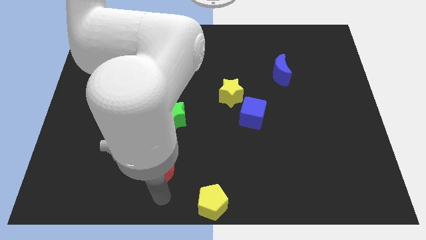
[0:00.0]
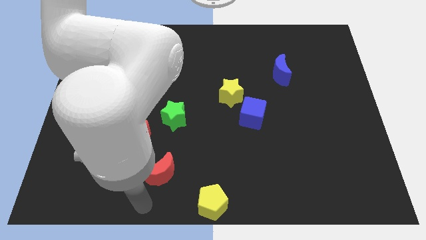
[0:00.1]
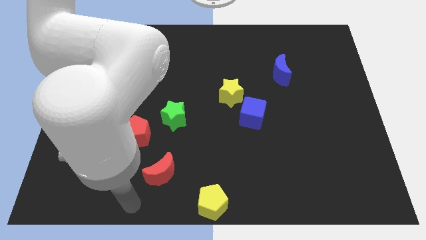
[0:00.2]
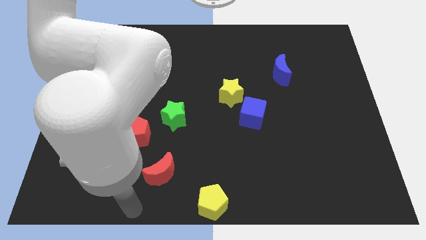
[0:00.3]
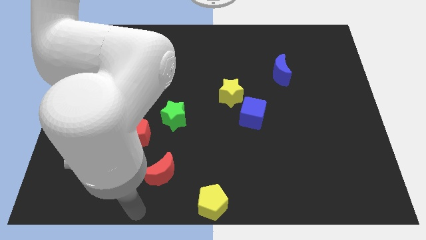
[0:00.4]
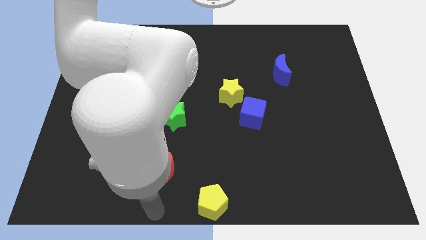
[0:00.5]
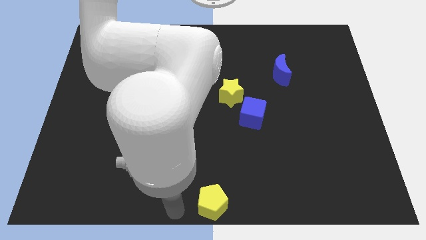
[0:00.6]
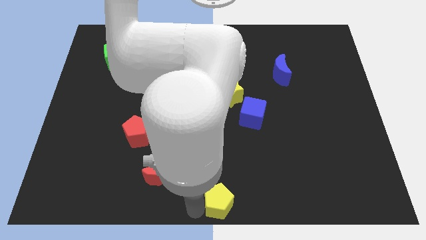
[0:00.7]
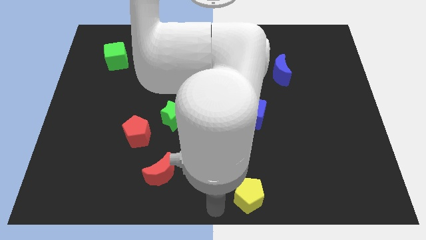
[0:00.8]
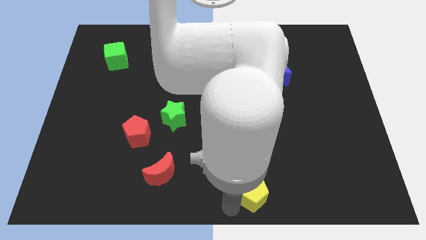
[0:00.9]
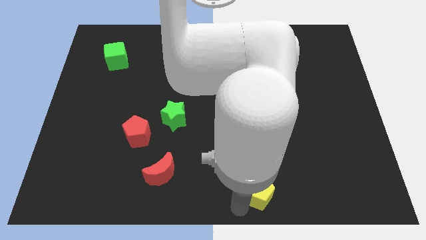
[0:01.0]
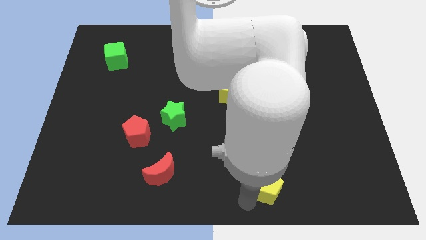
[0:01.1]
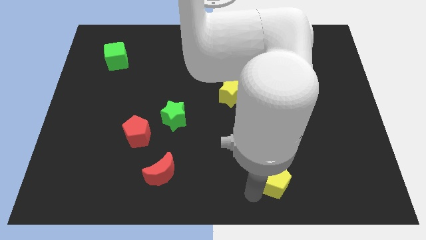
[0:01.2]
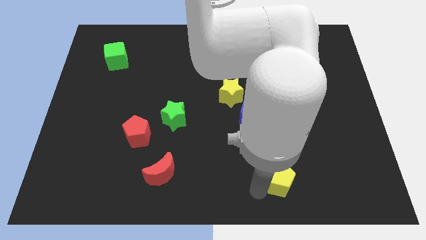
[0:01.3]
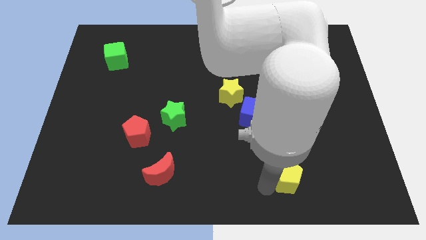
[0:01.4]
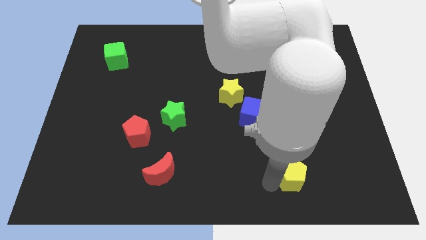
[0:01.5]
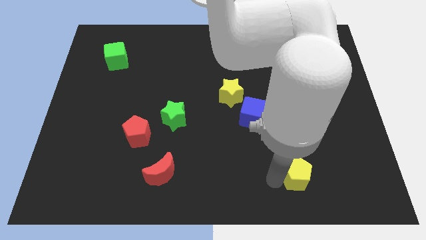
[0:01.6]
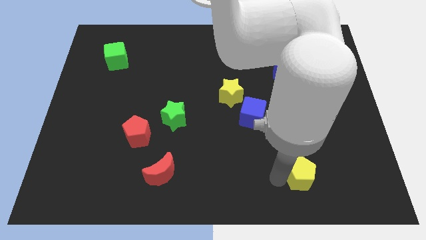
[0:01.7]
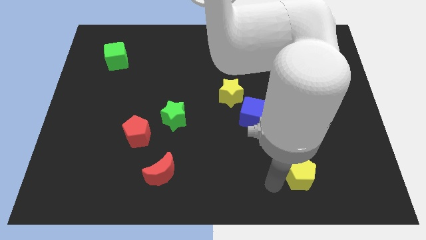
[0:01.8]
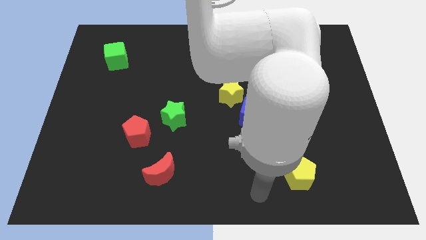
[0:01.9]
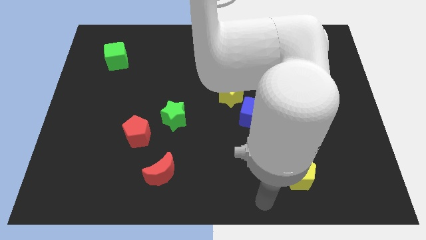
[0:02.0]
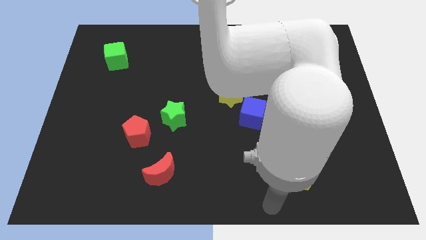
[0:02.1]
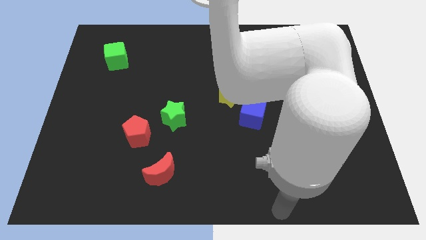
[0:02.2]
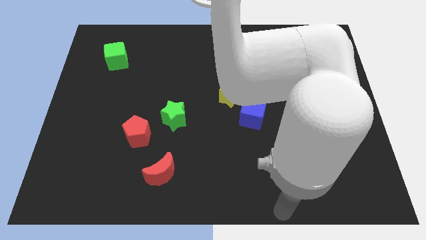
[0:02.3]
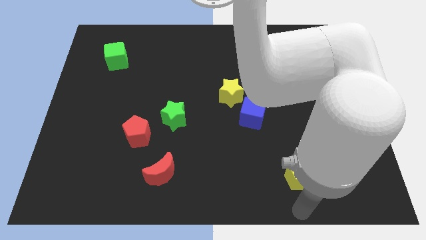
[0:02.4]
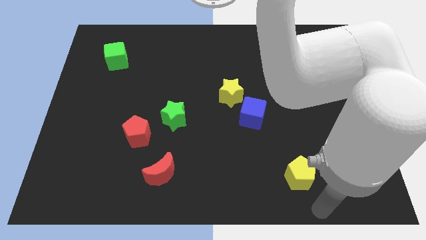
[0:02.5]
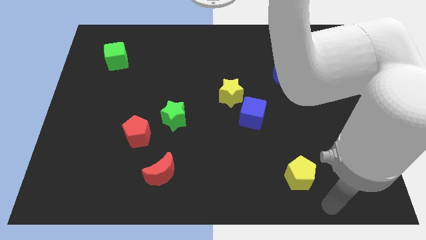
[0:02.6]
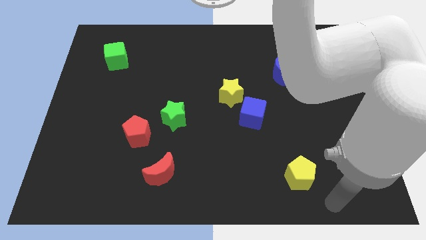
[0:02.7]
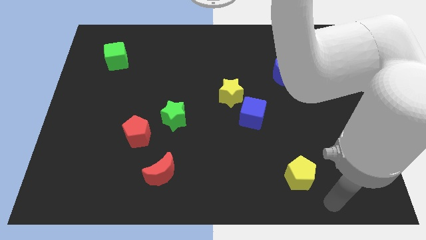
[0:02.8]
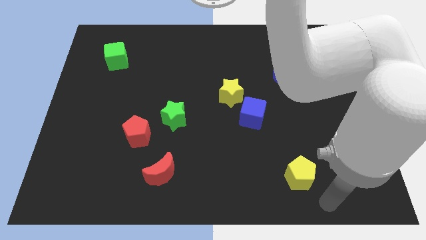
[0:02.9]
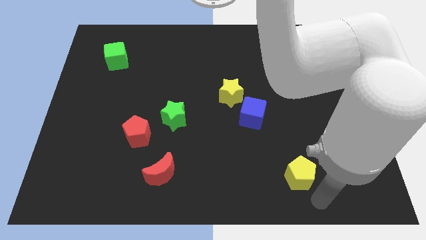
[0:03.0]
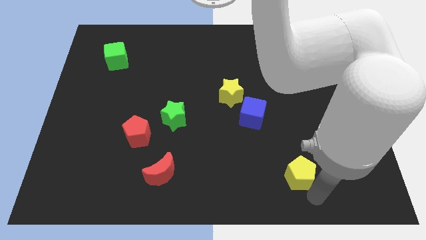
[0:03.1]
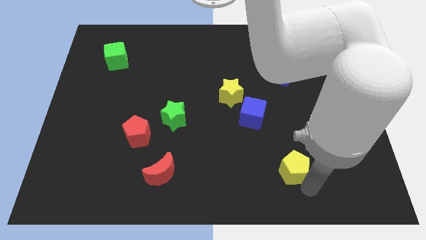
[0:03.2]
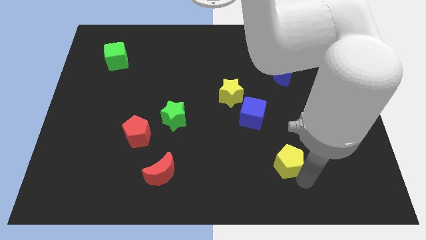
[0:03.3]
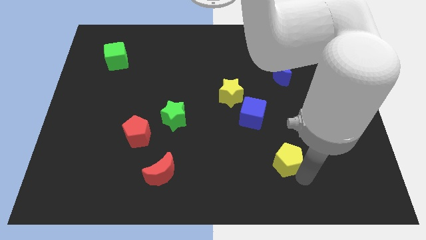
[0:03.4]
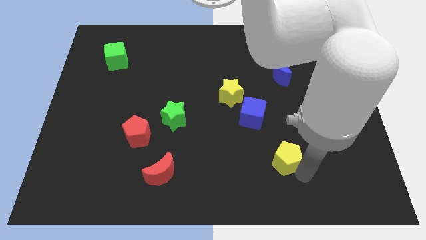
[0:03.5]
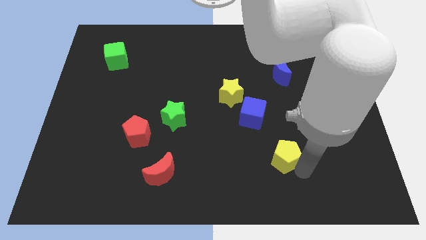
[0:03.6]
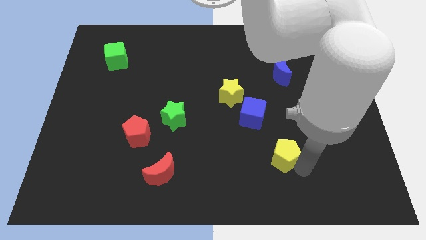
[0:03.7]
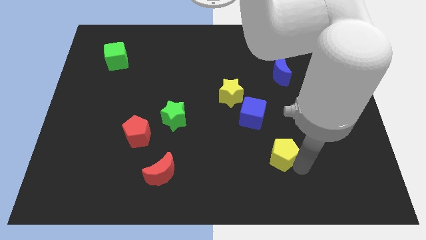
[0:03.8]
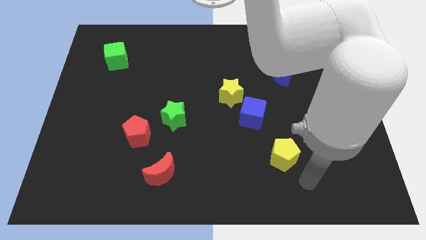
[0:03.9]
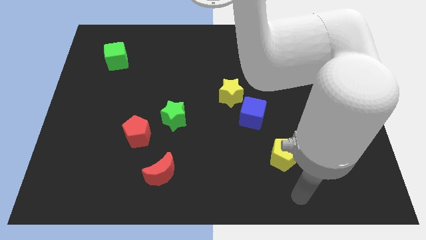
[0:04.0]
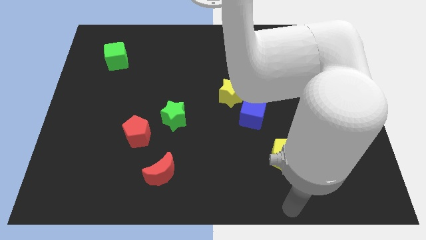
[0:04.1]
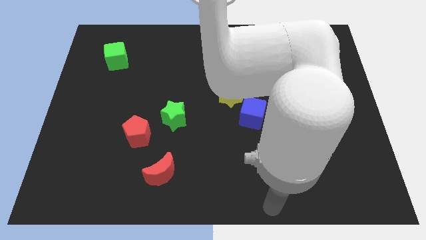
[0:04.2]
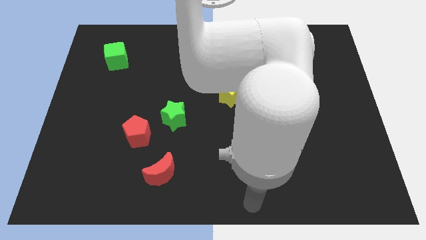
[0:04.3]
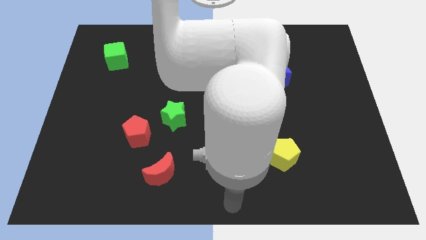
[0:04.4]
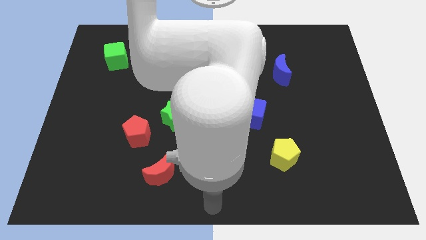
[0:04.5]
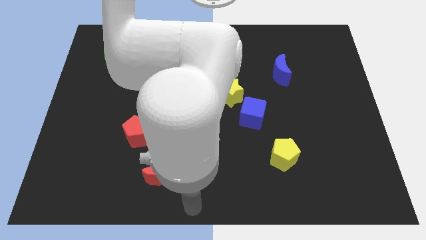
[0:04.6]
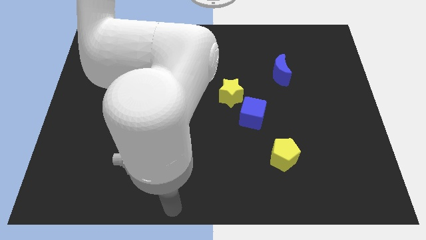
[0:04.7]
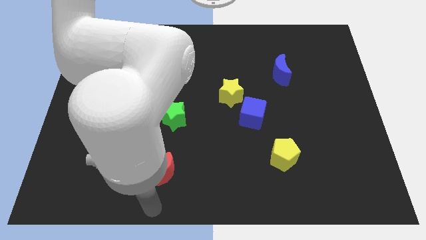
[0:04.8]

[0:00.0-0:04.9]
push the yellow pentagon towards the blue cube

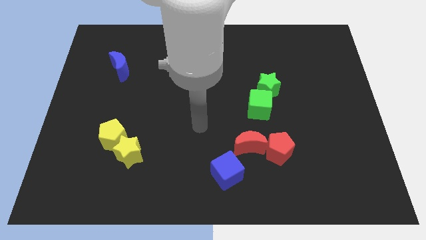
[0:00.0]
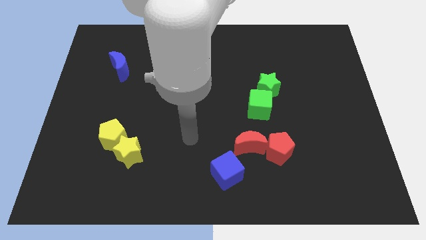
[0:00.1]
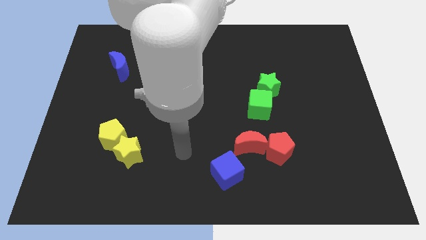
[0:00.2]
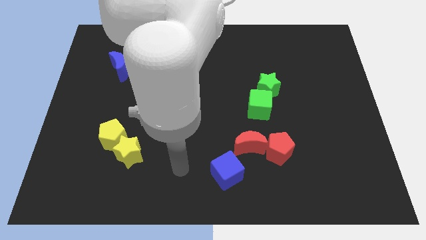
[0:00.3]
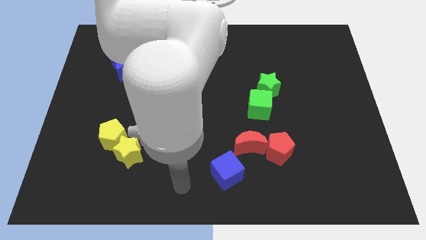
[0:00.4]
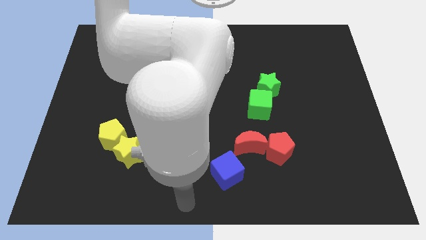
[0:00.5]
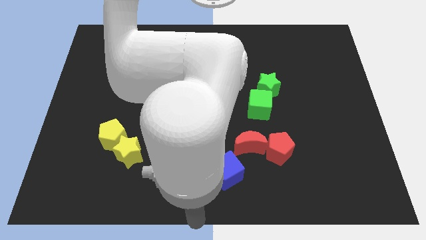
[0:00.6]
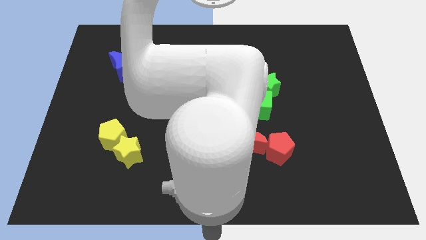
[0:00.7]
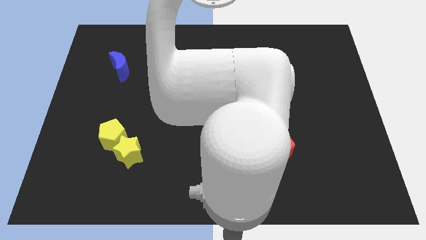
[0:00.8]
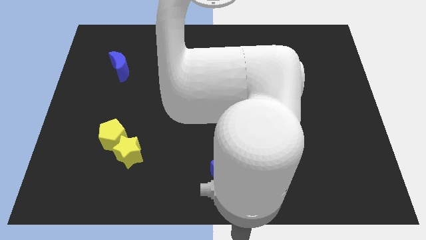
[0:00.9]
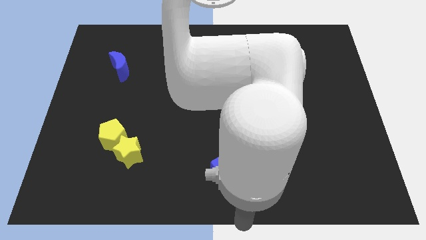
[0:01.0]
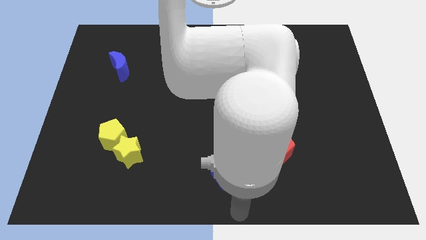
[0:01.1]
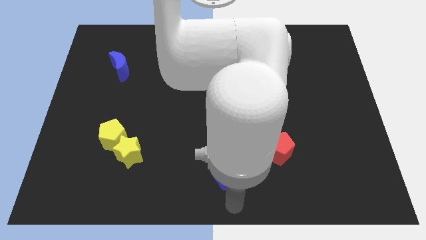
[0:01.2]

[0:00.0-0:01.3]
point the arm below the blue cube

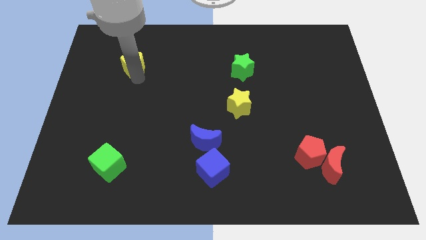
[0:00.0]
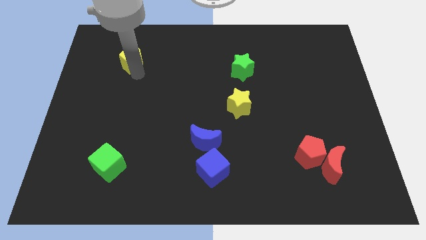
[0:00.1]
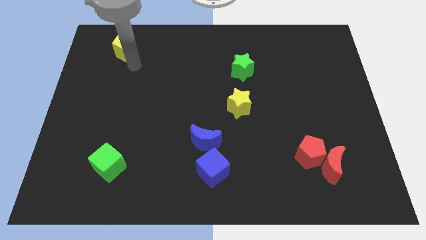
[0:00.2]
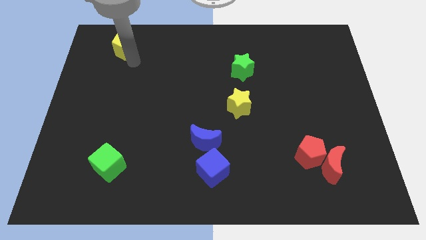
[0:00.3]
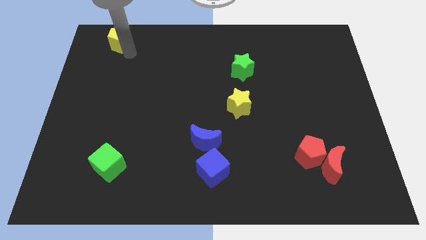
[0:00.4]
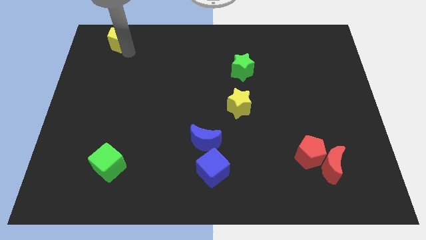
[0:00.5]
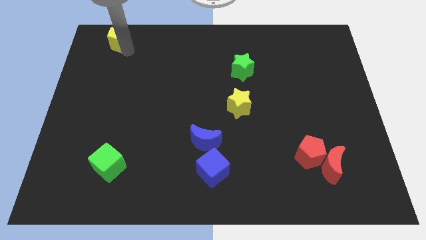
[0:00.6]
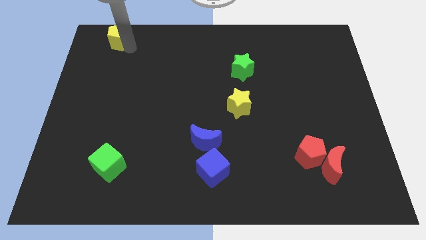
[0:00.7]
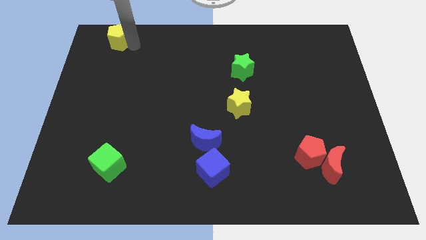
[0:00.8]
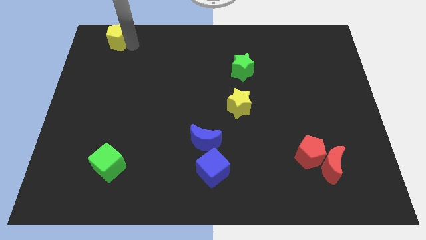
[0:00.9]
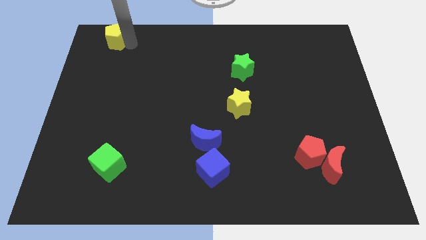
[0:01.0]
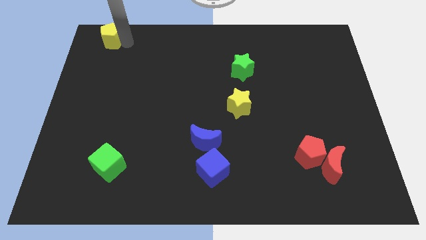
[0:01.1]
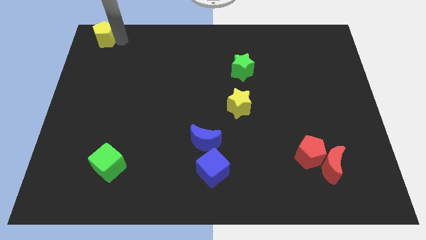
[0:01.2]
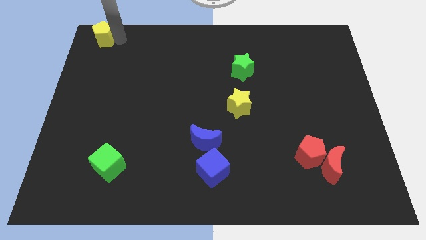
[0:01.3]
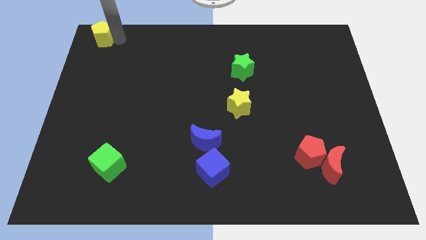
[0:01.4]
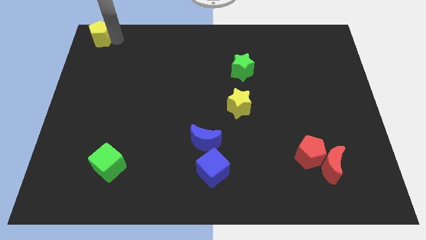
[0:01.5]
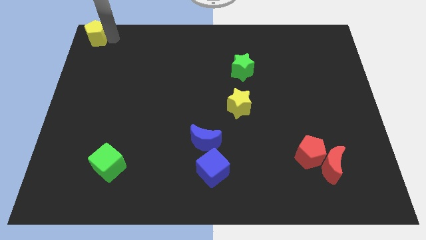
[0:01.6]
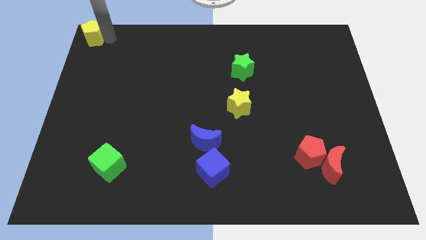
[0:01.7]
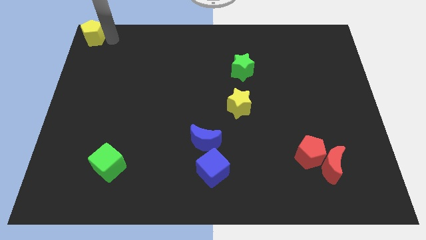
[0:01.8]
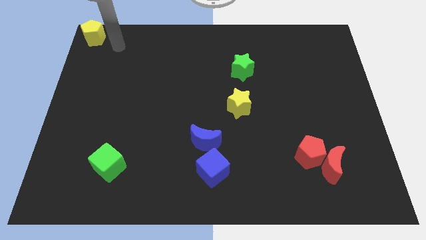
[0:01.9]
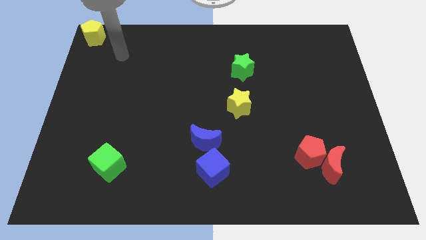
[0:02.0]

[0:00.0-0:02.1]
push yellow pentagon to the top left

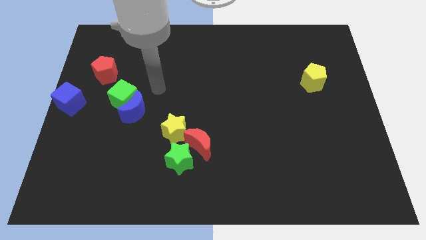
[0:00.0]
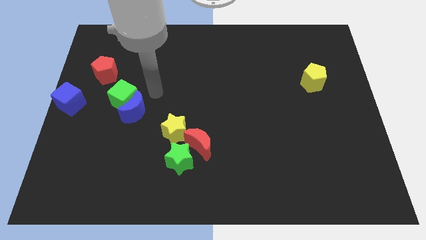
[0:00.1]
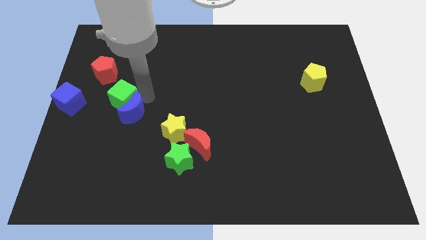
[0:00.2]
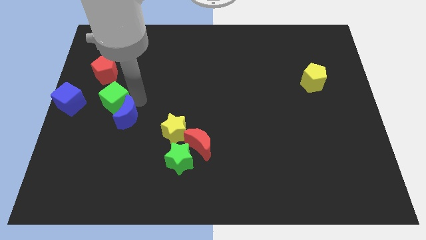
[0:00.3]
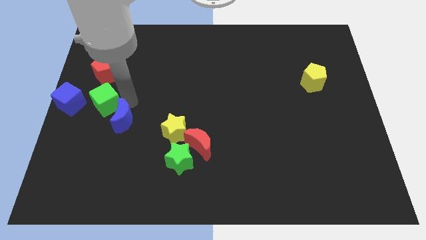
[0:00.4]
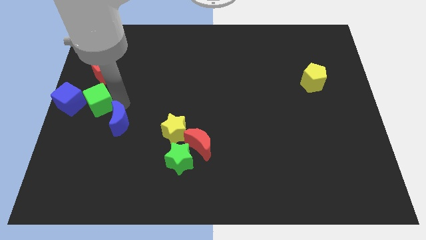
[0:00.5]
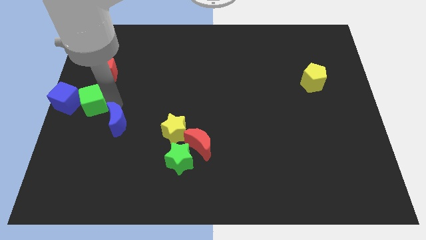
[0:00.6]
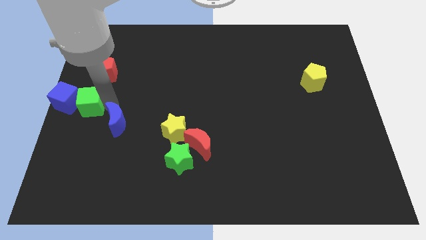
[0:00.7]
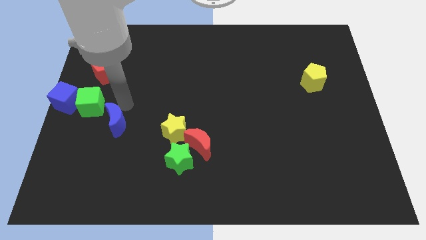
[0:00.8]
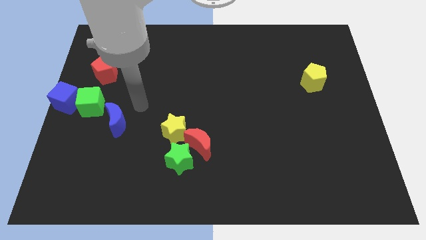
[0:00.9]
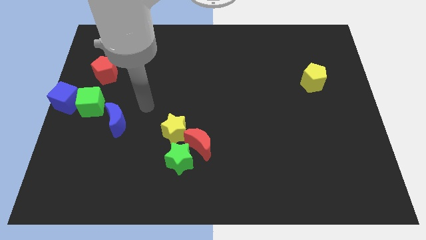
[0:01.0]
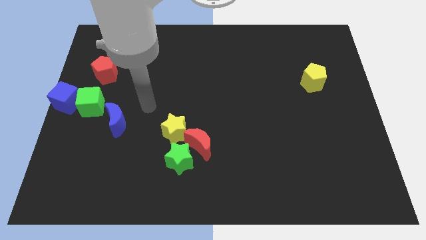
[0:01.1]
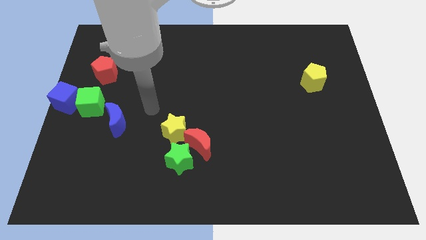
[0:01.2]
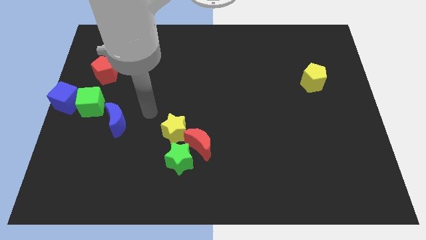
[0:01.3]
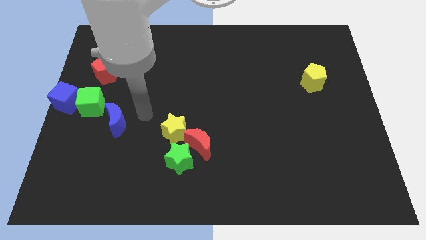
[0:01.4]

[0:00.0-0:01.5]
push the green cube into the blue cube
